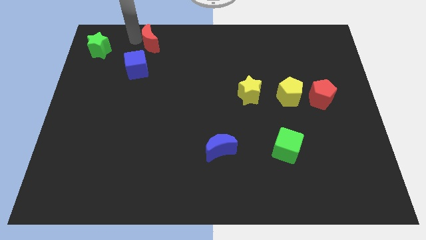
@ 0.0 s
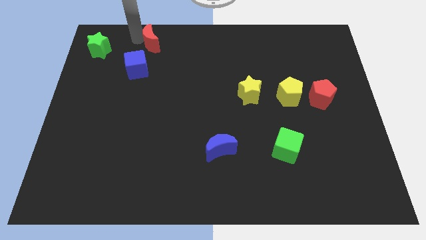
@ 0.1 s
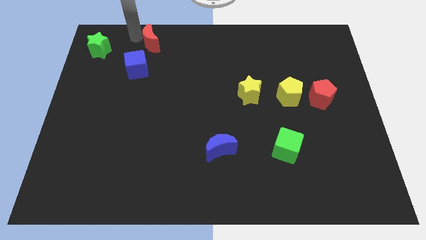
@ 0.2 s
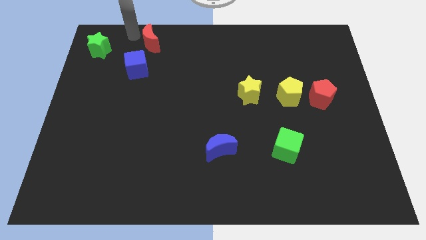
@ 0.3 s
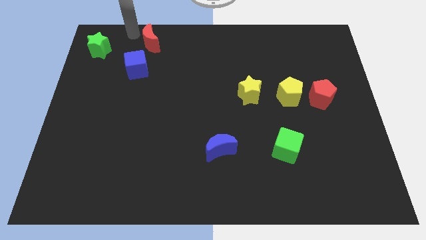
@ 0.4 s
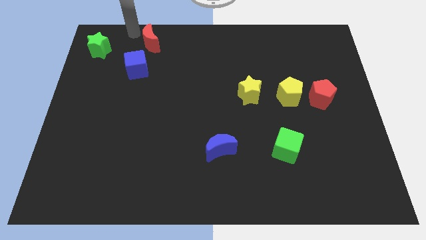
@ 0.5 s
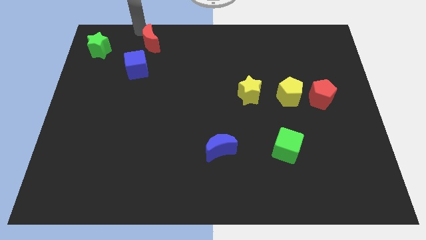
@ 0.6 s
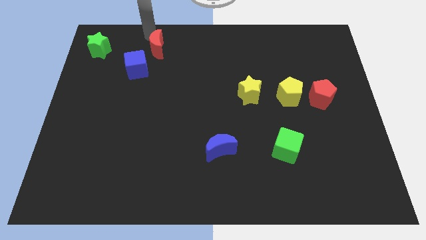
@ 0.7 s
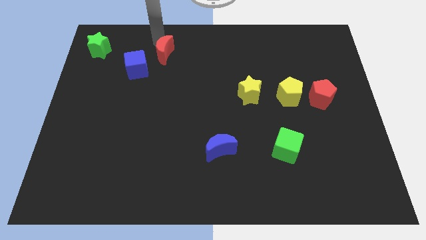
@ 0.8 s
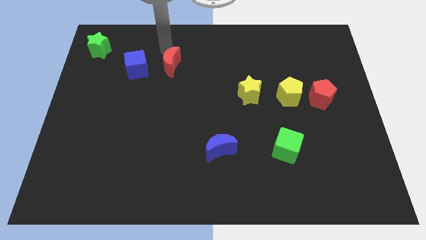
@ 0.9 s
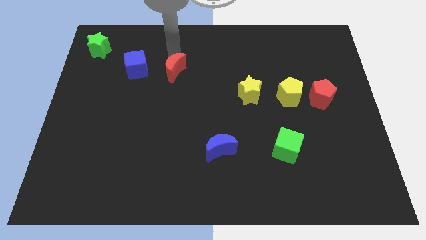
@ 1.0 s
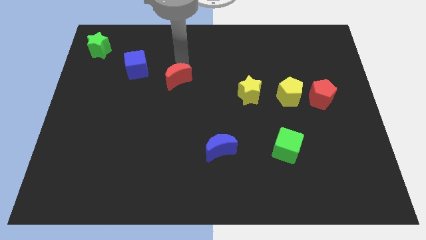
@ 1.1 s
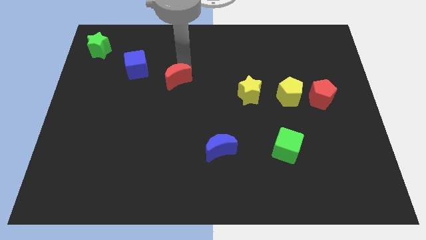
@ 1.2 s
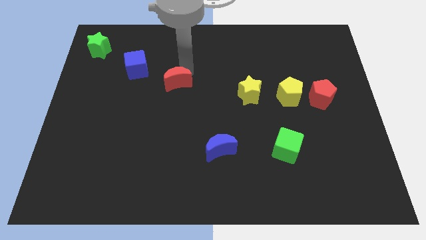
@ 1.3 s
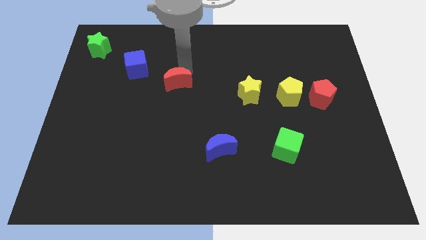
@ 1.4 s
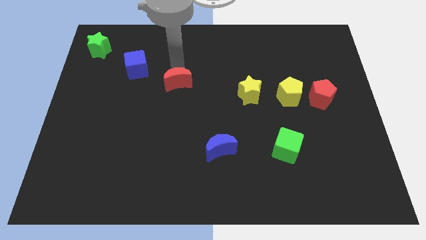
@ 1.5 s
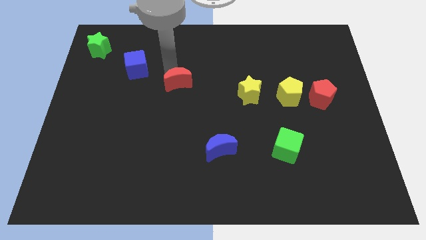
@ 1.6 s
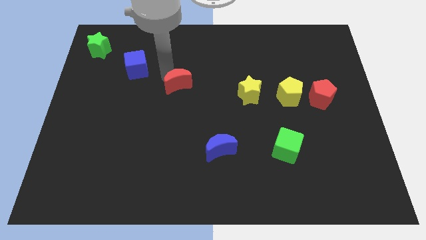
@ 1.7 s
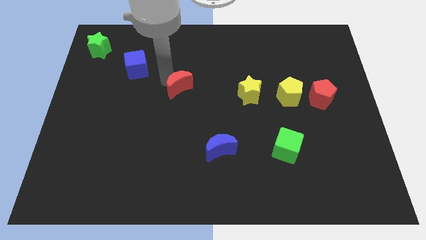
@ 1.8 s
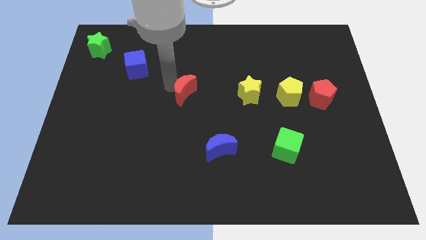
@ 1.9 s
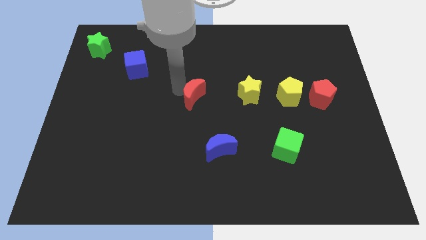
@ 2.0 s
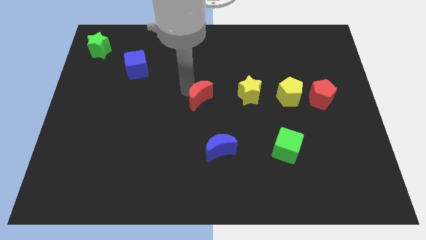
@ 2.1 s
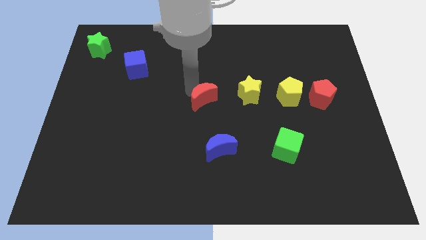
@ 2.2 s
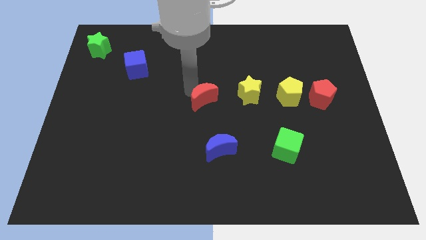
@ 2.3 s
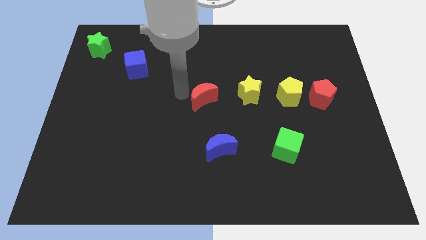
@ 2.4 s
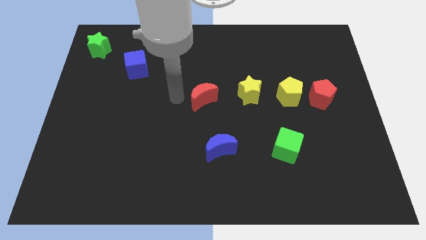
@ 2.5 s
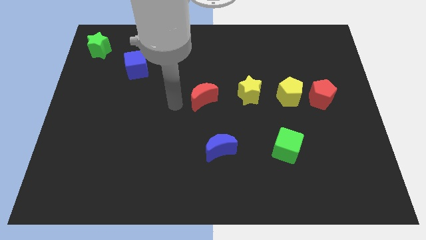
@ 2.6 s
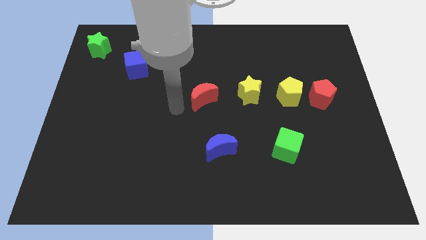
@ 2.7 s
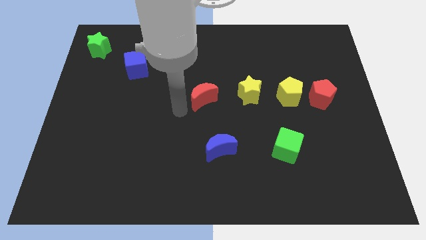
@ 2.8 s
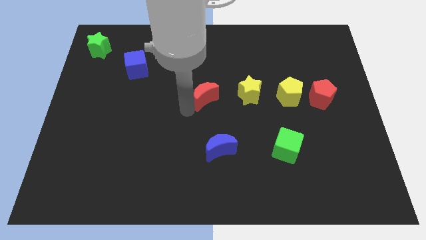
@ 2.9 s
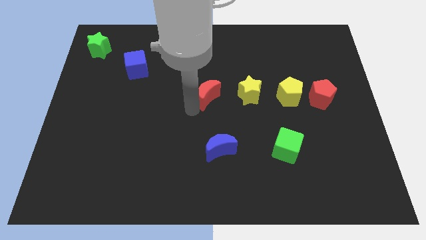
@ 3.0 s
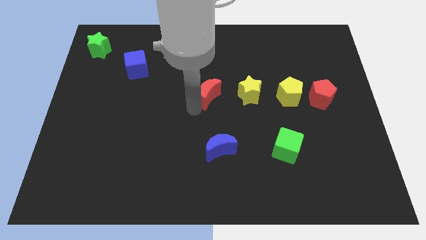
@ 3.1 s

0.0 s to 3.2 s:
place red crescent at center of the board

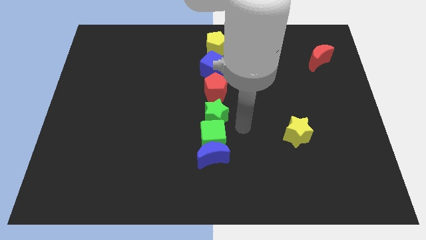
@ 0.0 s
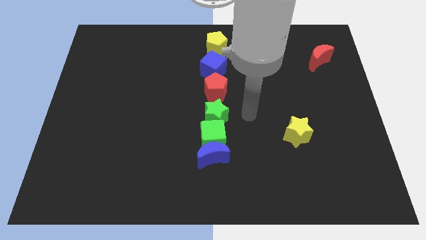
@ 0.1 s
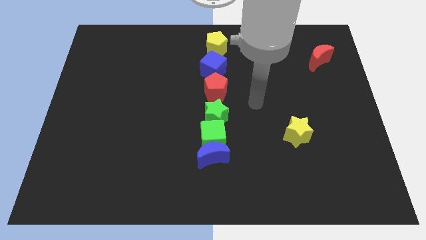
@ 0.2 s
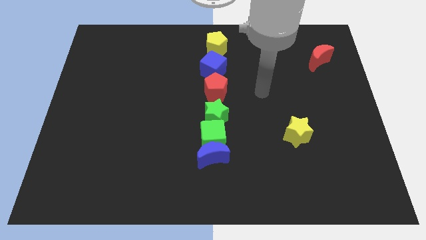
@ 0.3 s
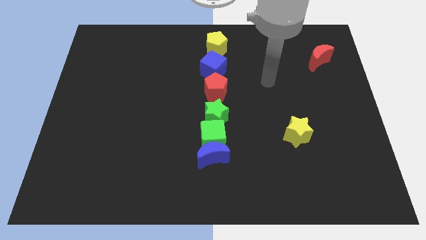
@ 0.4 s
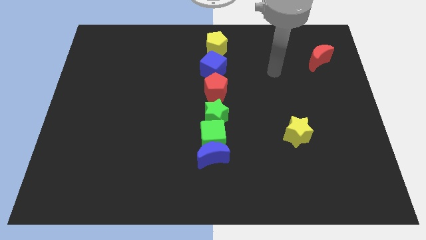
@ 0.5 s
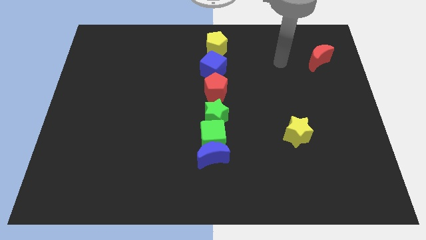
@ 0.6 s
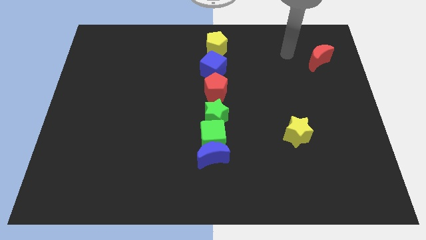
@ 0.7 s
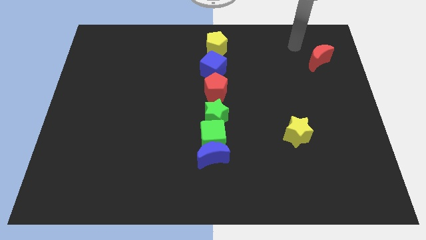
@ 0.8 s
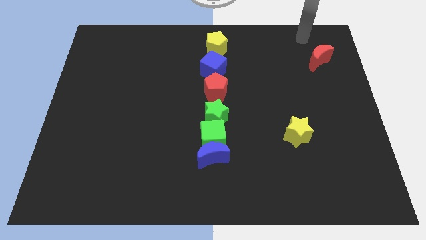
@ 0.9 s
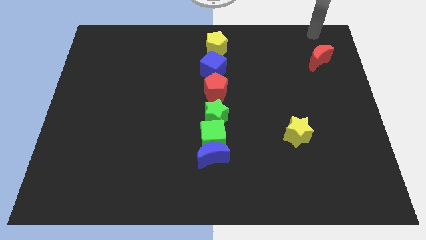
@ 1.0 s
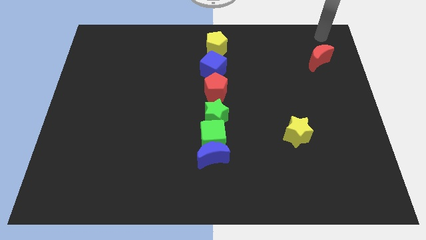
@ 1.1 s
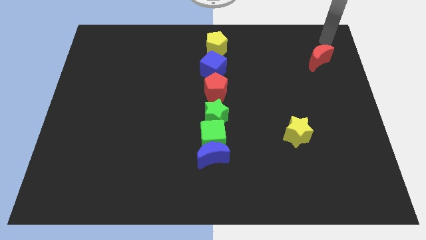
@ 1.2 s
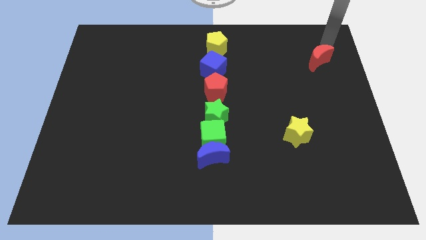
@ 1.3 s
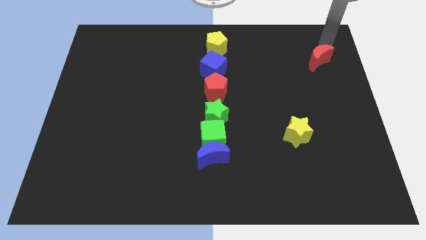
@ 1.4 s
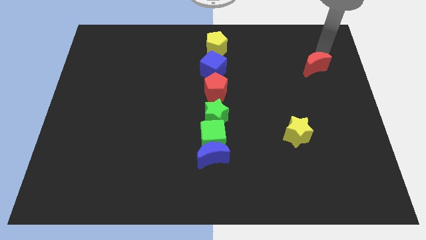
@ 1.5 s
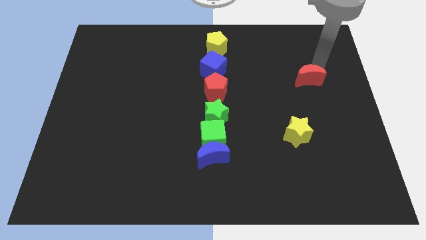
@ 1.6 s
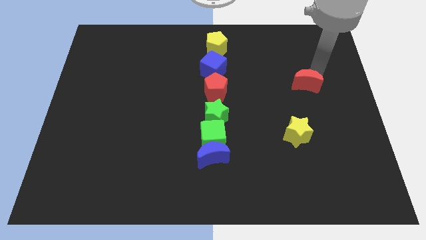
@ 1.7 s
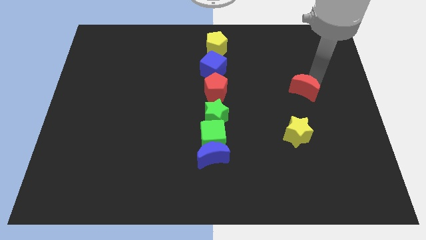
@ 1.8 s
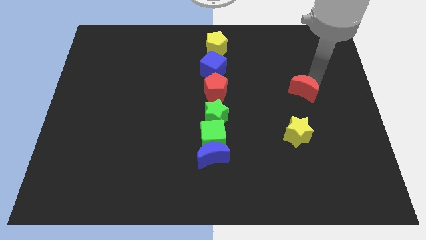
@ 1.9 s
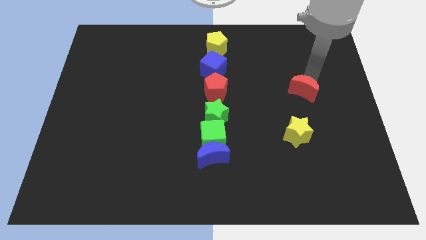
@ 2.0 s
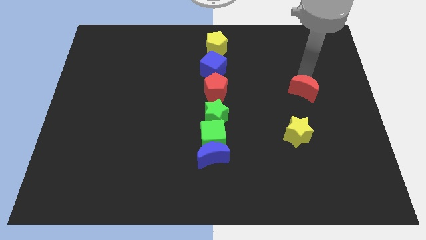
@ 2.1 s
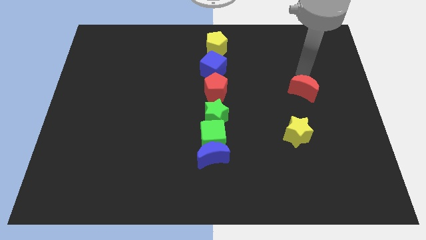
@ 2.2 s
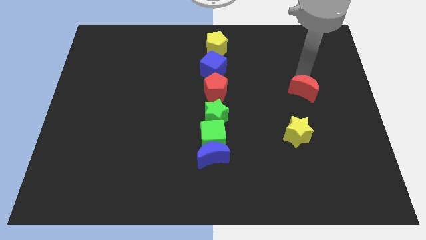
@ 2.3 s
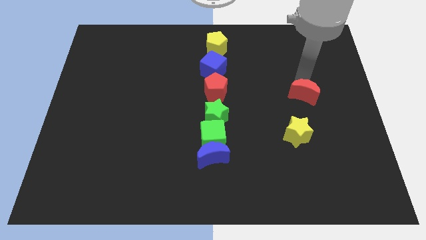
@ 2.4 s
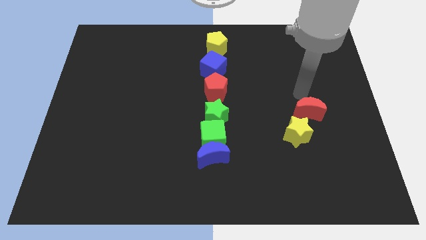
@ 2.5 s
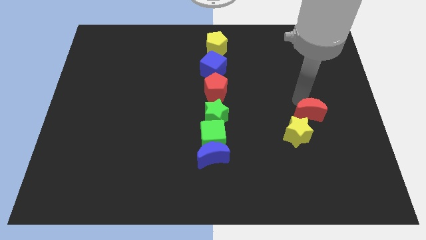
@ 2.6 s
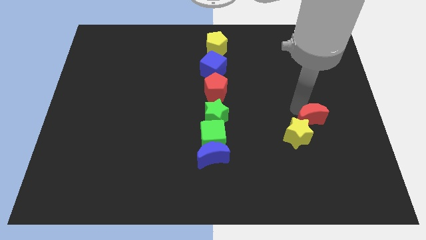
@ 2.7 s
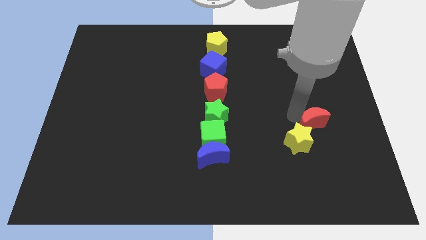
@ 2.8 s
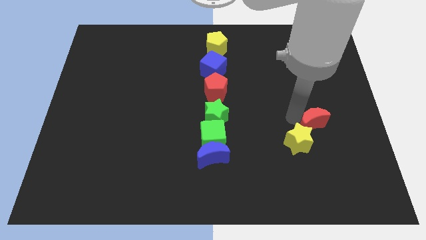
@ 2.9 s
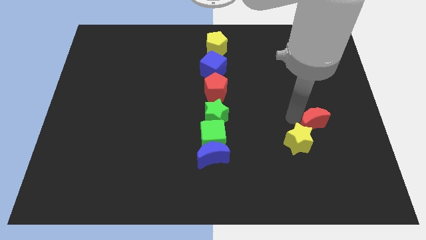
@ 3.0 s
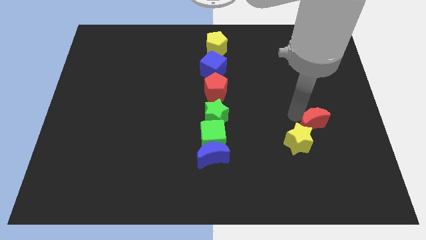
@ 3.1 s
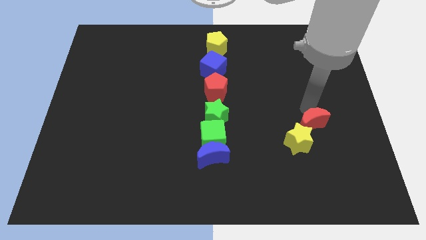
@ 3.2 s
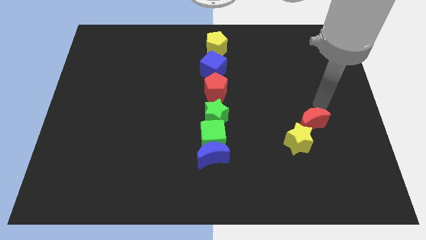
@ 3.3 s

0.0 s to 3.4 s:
push the red crescent to the top right of the yellow star

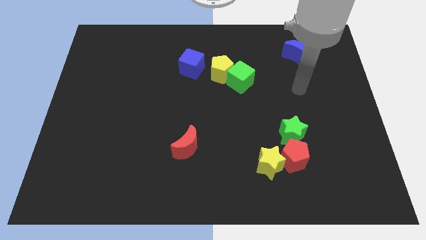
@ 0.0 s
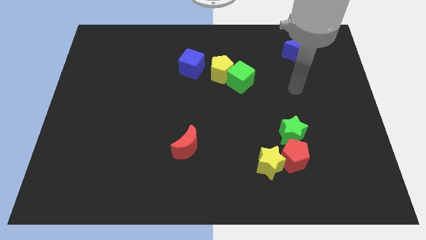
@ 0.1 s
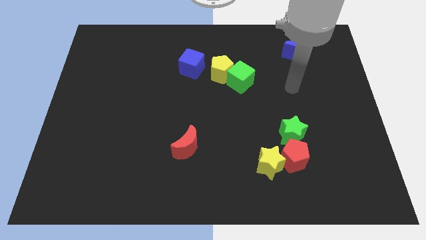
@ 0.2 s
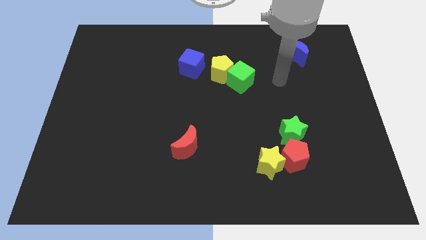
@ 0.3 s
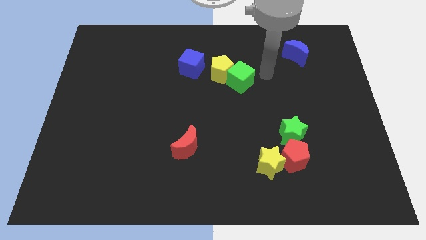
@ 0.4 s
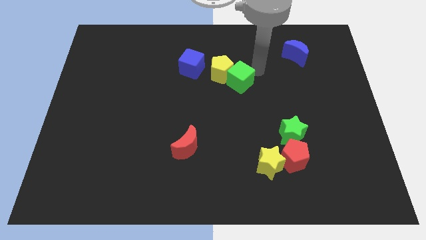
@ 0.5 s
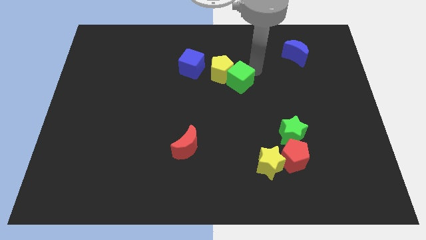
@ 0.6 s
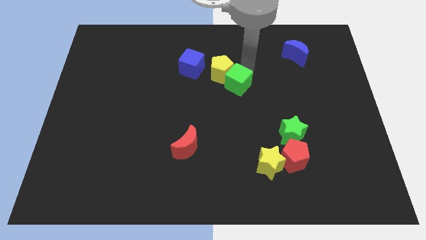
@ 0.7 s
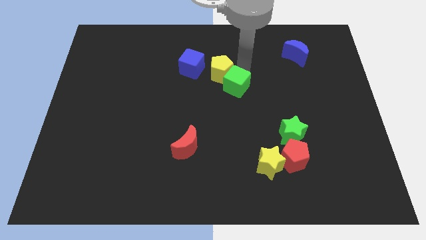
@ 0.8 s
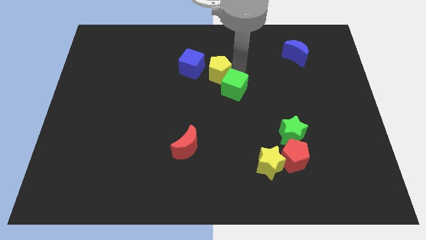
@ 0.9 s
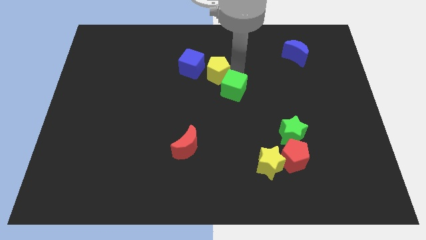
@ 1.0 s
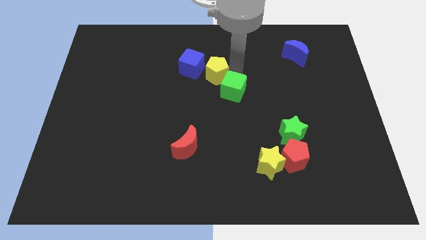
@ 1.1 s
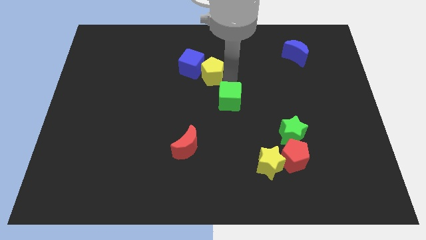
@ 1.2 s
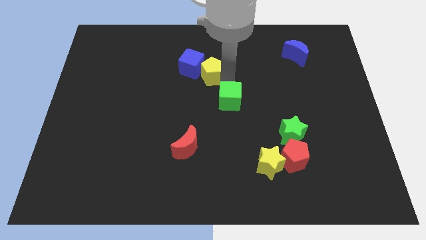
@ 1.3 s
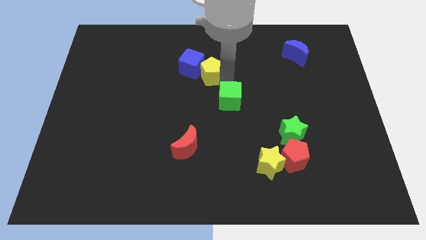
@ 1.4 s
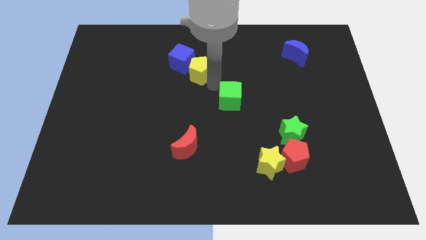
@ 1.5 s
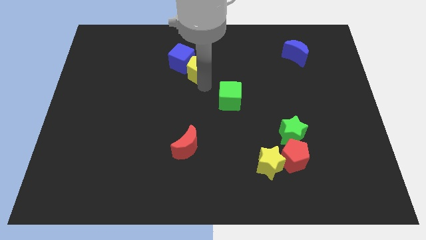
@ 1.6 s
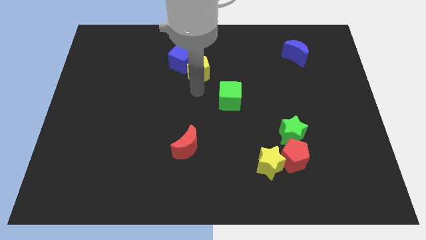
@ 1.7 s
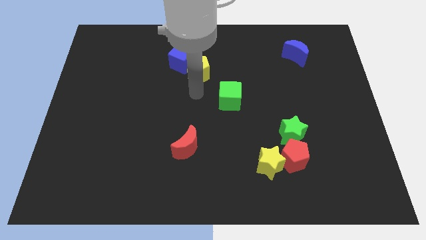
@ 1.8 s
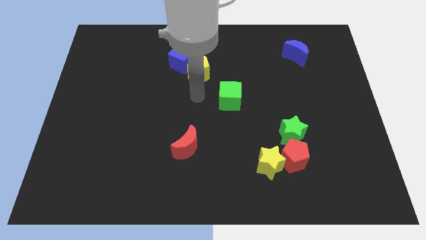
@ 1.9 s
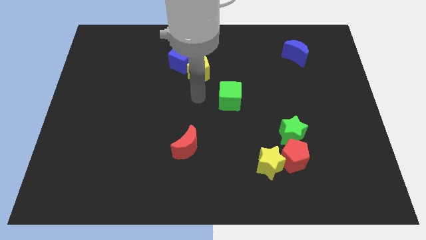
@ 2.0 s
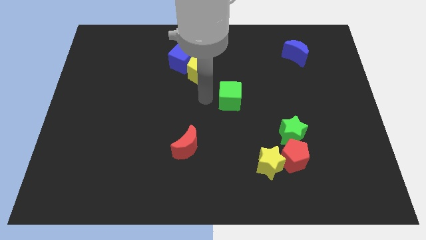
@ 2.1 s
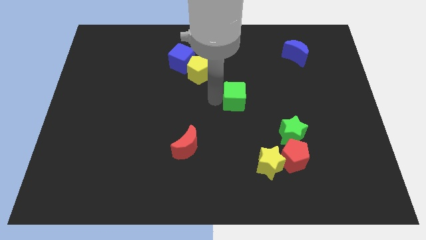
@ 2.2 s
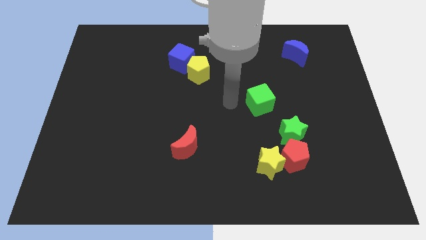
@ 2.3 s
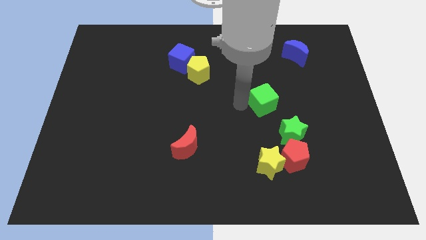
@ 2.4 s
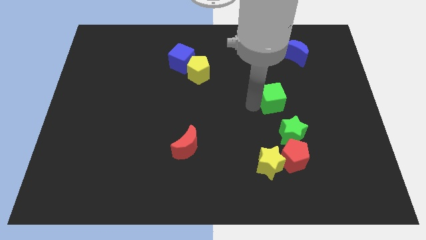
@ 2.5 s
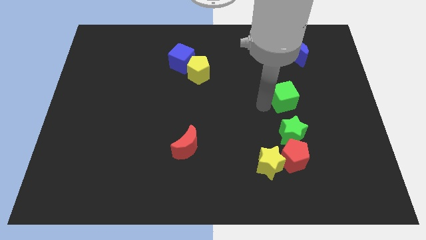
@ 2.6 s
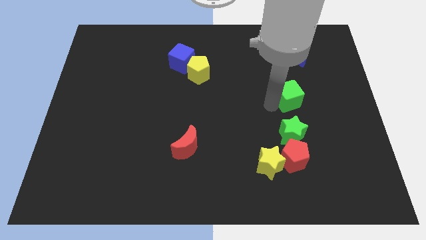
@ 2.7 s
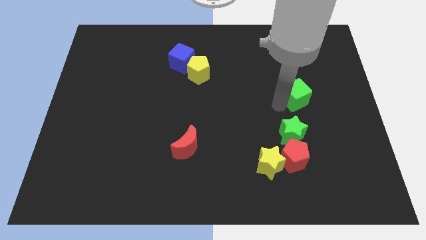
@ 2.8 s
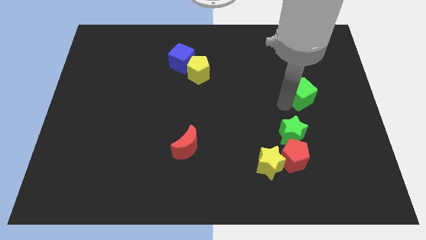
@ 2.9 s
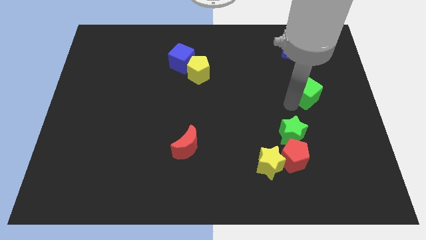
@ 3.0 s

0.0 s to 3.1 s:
move the green cube above the green star
